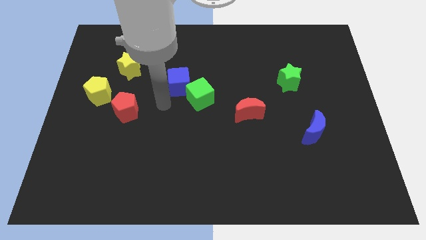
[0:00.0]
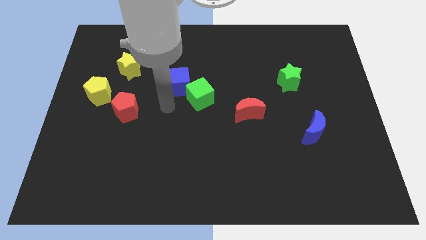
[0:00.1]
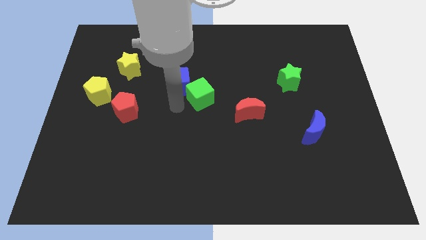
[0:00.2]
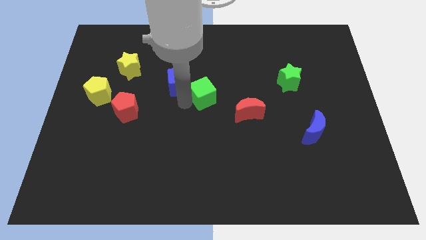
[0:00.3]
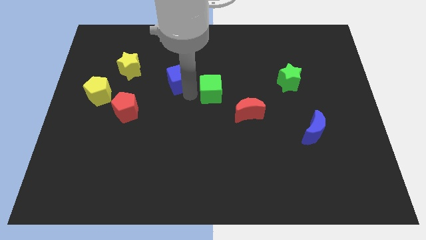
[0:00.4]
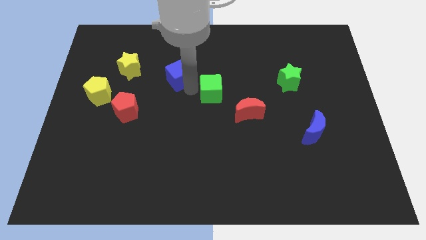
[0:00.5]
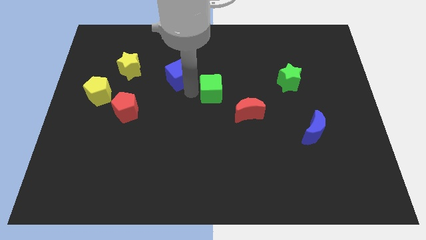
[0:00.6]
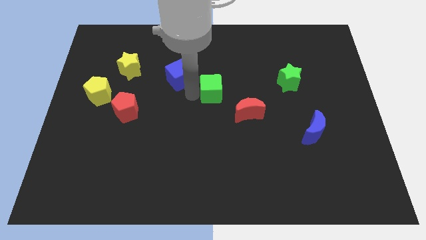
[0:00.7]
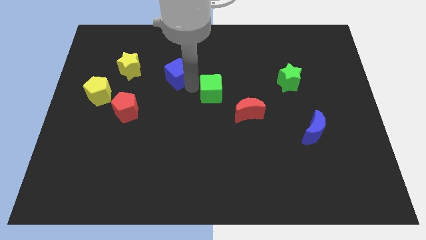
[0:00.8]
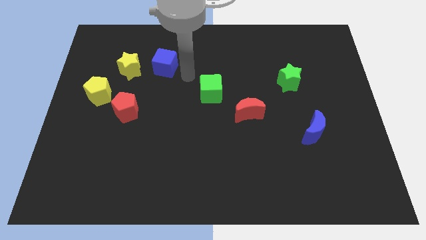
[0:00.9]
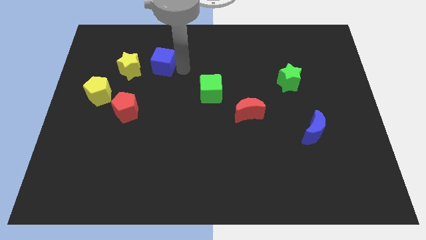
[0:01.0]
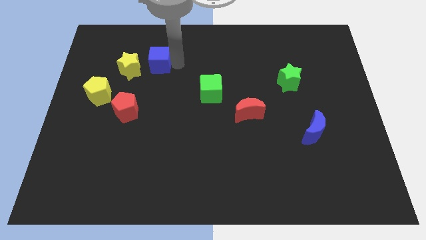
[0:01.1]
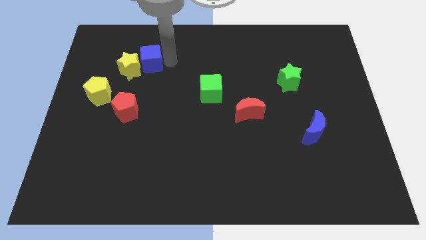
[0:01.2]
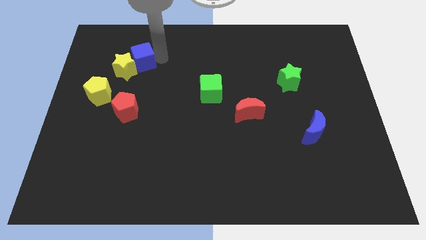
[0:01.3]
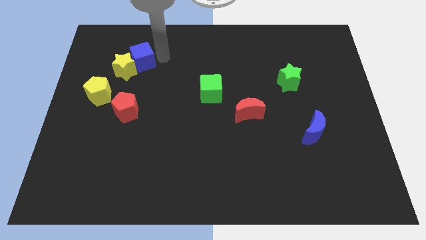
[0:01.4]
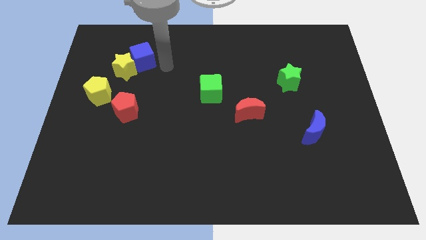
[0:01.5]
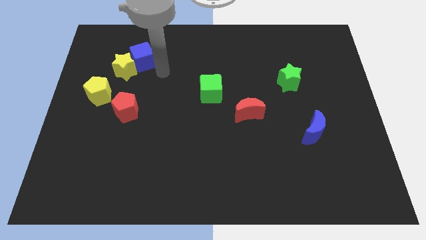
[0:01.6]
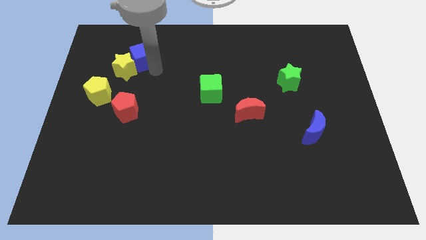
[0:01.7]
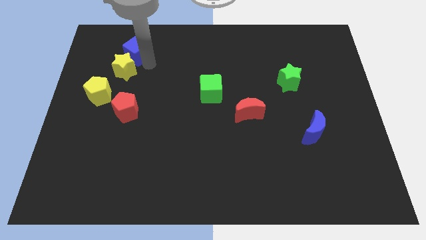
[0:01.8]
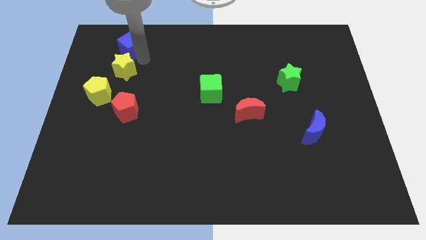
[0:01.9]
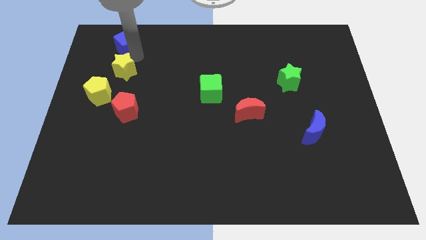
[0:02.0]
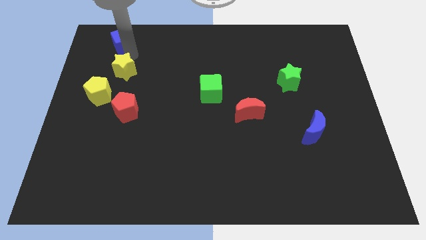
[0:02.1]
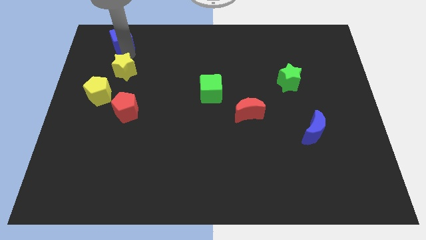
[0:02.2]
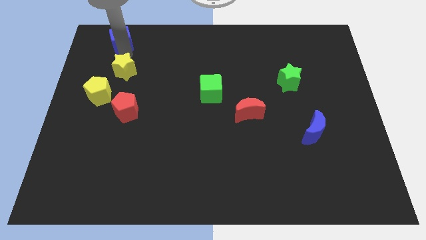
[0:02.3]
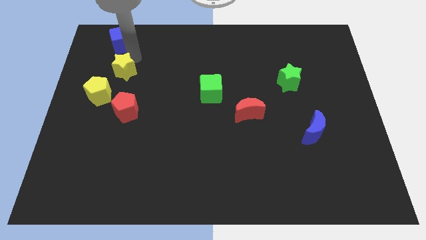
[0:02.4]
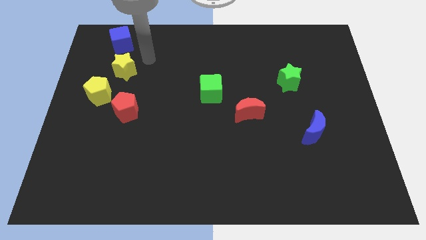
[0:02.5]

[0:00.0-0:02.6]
place blue cube above yellow star

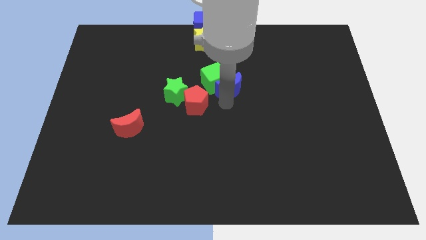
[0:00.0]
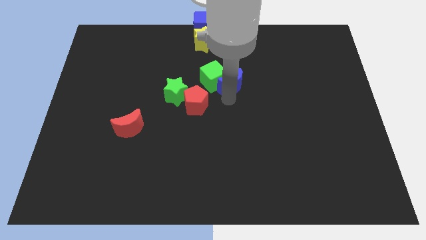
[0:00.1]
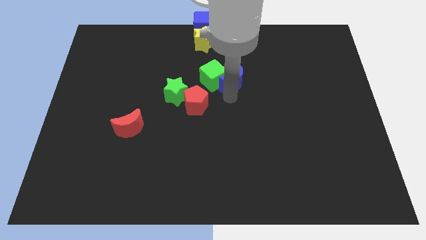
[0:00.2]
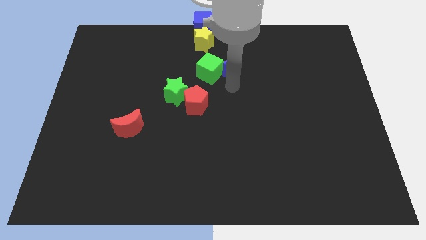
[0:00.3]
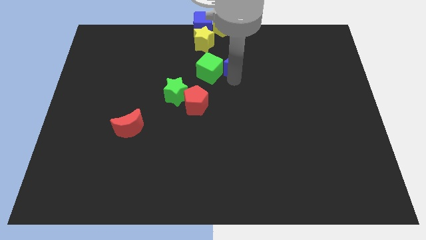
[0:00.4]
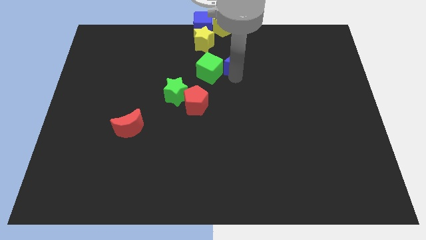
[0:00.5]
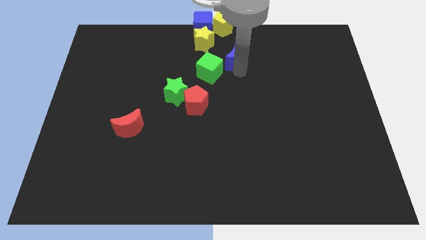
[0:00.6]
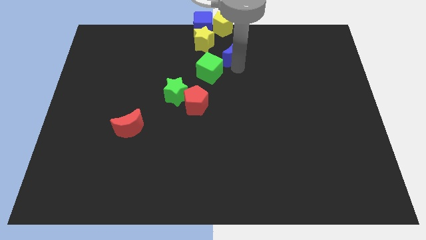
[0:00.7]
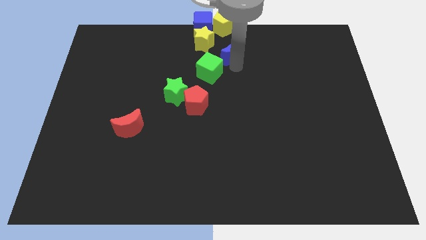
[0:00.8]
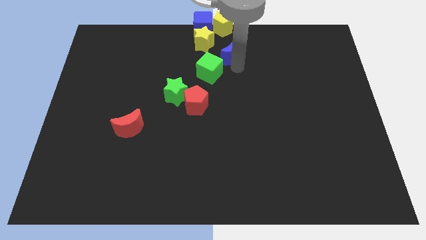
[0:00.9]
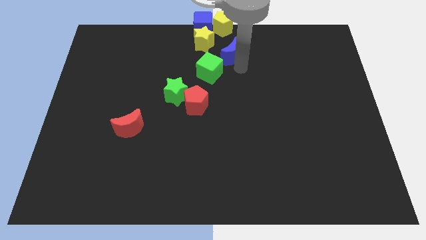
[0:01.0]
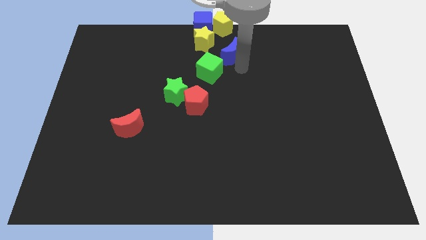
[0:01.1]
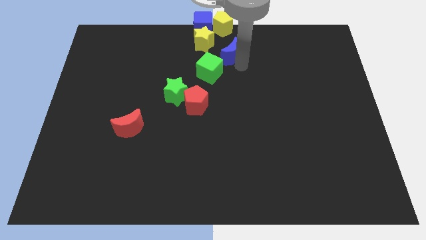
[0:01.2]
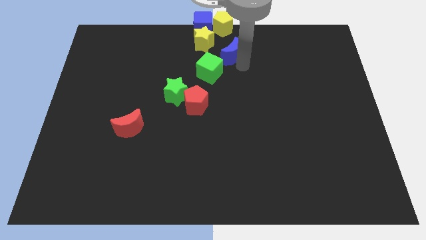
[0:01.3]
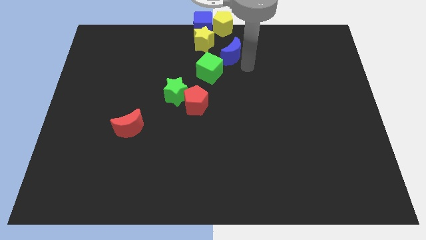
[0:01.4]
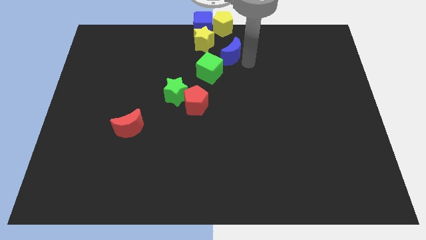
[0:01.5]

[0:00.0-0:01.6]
place the green cube at the bottom of the yellow star on right side

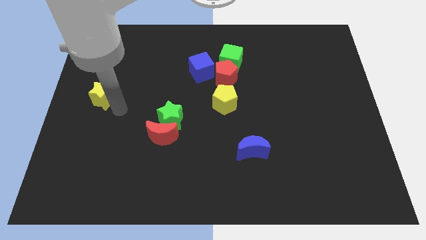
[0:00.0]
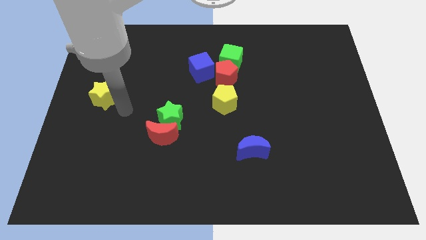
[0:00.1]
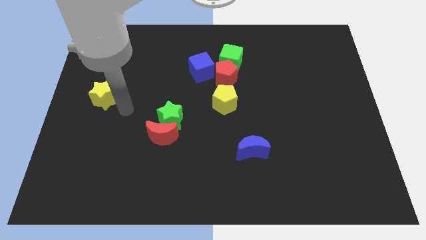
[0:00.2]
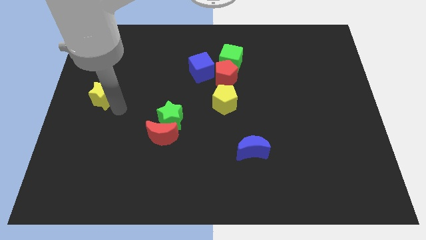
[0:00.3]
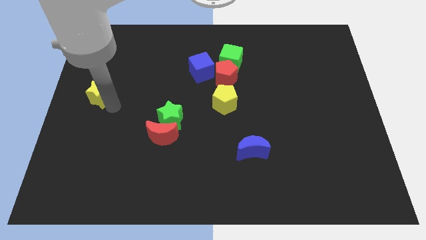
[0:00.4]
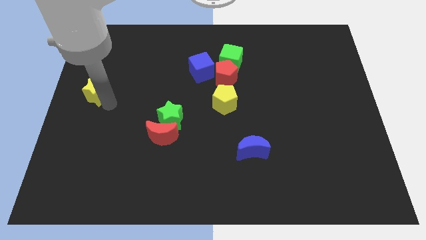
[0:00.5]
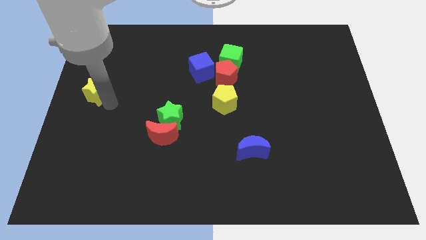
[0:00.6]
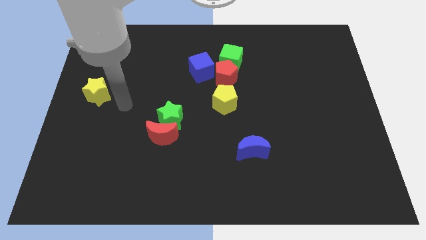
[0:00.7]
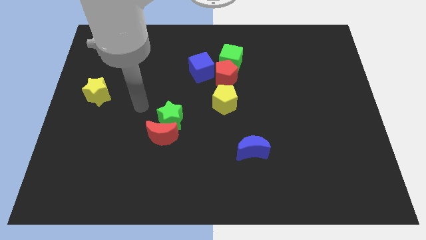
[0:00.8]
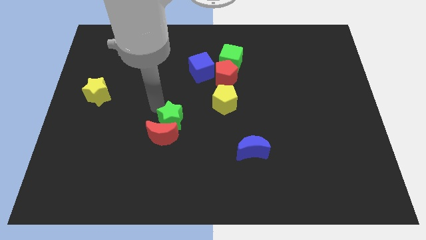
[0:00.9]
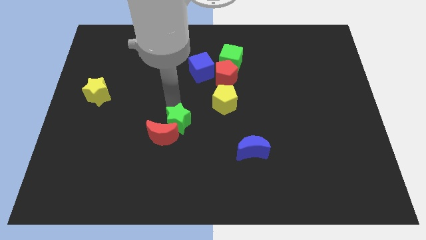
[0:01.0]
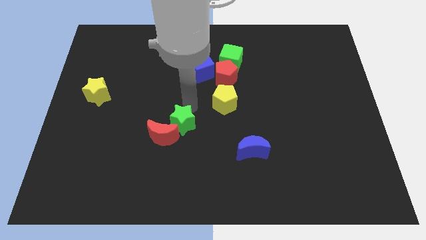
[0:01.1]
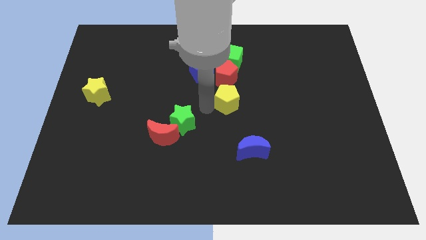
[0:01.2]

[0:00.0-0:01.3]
slightly move yellow pentagon to the left side

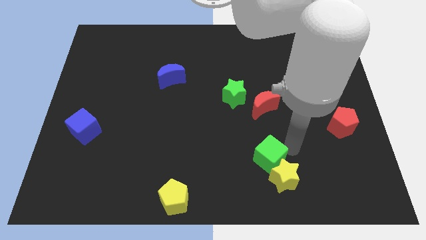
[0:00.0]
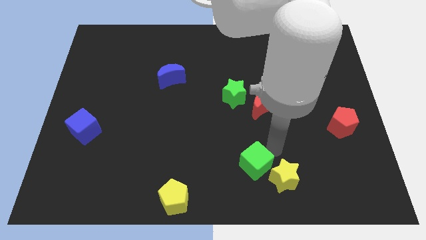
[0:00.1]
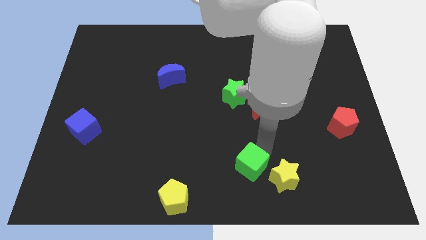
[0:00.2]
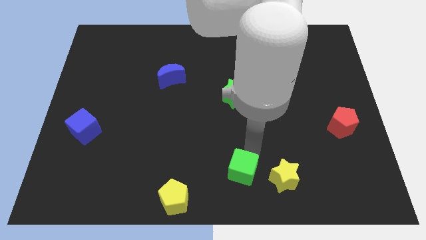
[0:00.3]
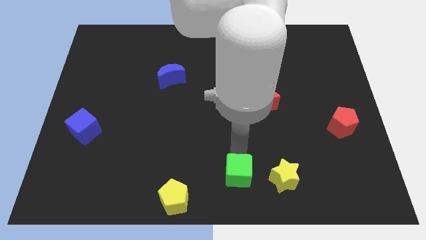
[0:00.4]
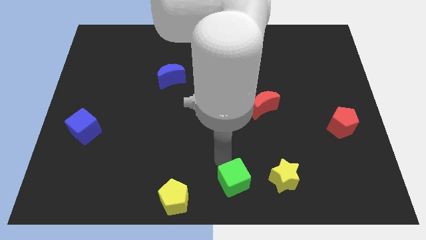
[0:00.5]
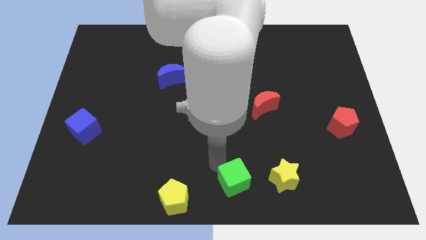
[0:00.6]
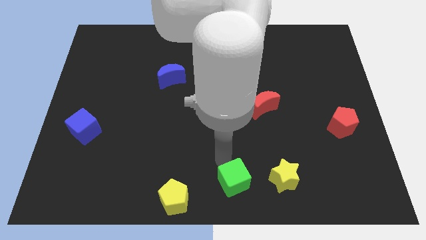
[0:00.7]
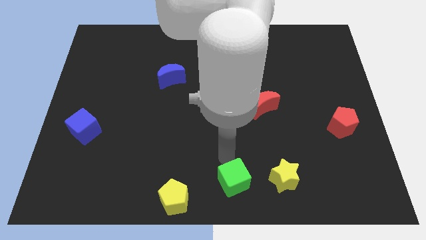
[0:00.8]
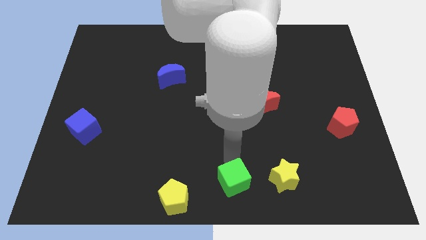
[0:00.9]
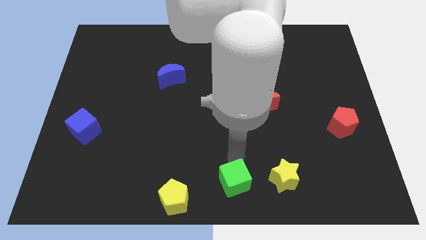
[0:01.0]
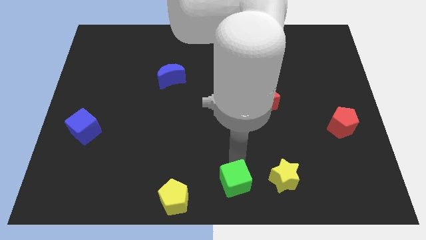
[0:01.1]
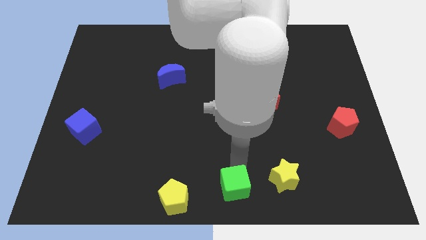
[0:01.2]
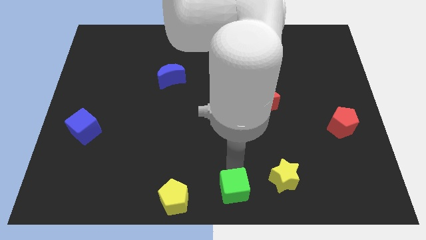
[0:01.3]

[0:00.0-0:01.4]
place the green cube diagonally in between both the yellow blocks

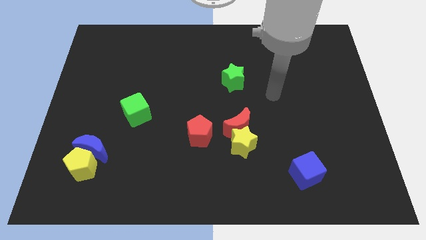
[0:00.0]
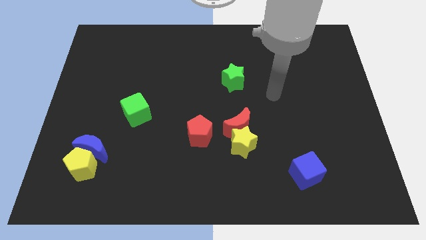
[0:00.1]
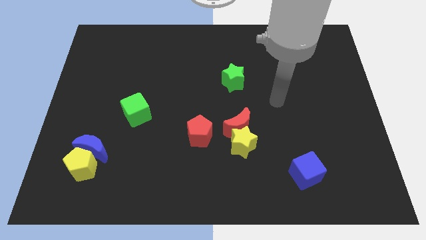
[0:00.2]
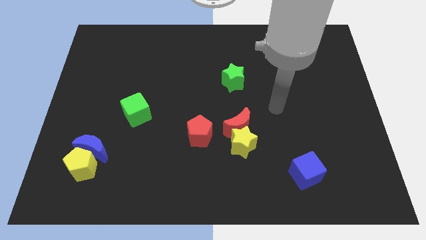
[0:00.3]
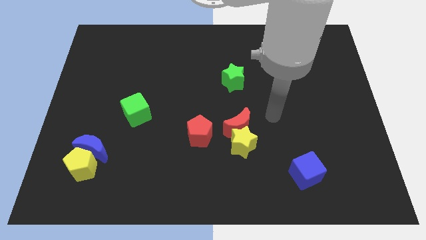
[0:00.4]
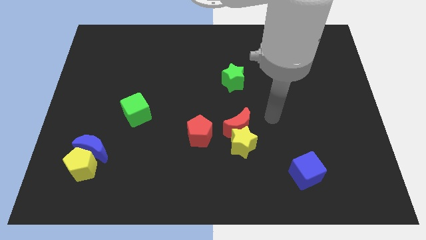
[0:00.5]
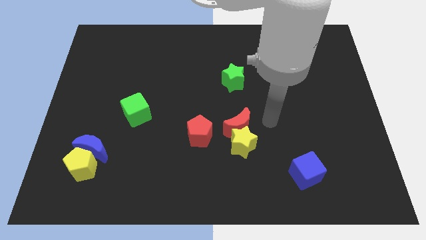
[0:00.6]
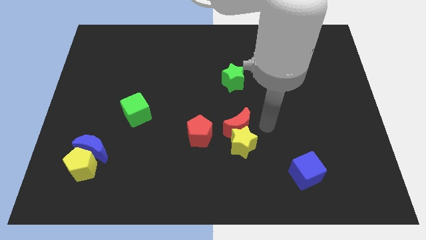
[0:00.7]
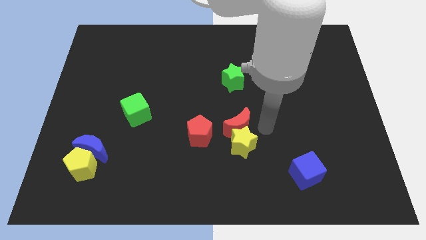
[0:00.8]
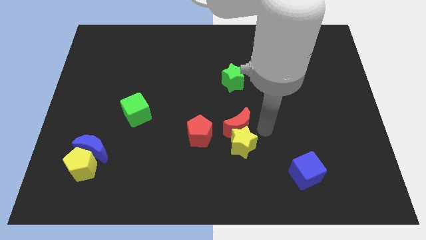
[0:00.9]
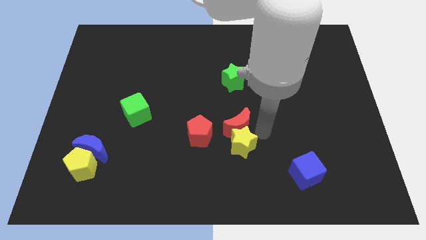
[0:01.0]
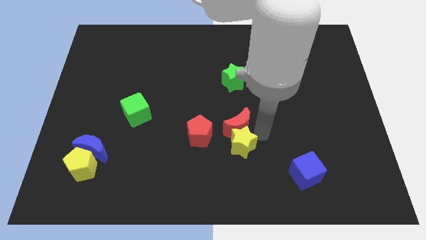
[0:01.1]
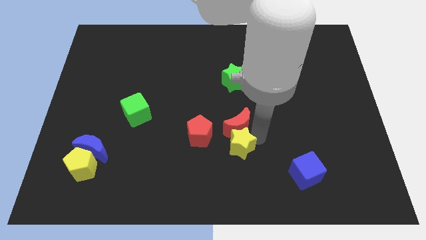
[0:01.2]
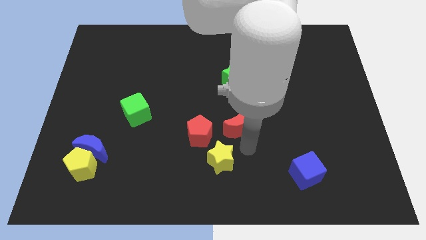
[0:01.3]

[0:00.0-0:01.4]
separate the yellow star from the red moon

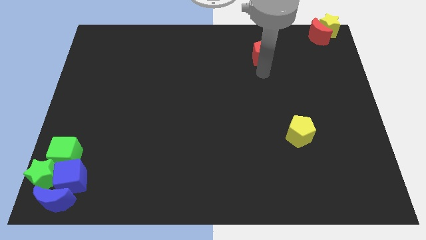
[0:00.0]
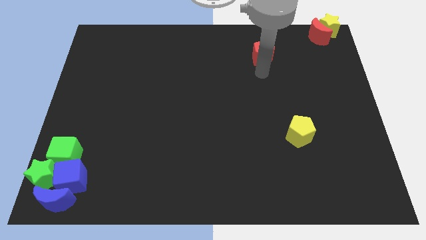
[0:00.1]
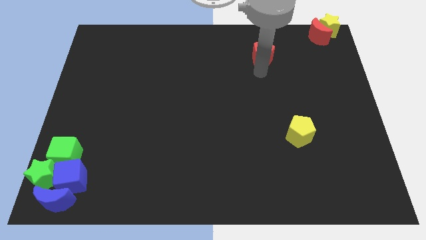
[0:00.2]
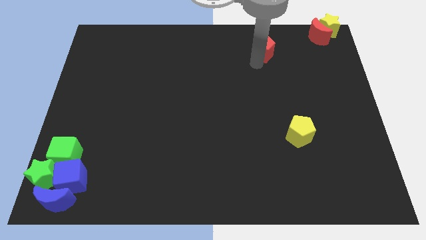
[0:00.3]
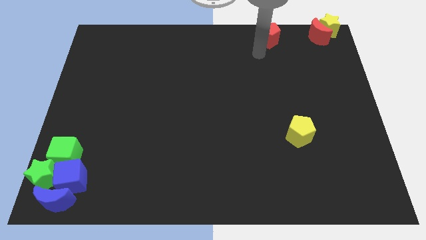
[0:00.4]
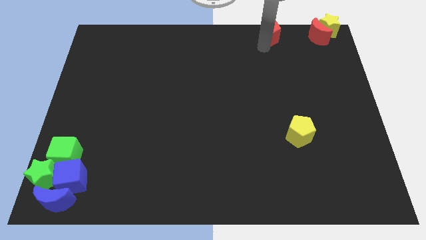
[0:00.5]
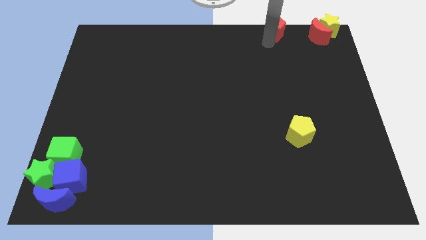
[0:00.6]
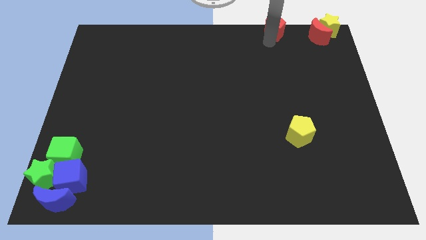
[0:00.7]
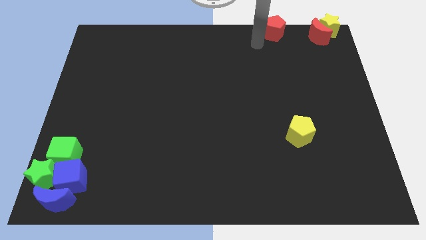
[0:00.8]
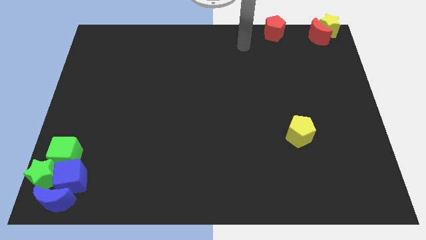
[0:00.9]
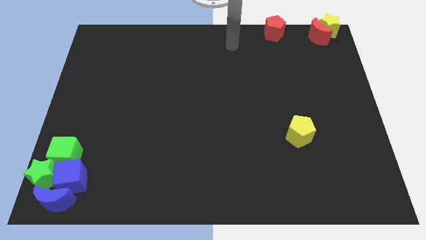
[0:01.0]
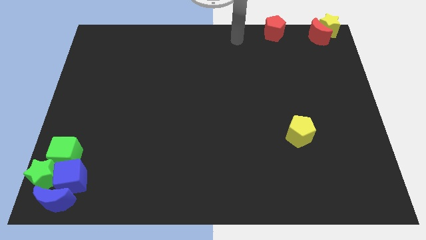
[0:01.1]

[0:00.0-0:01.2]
place red pentagon to the left of red moon
